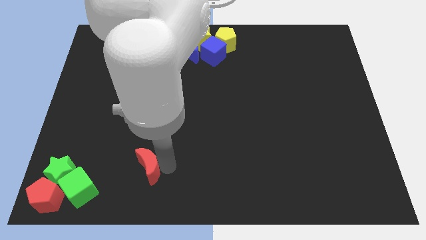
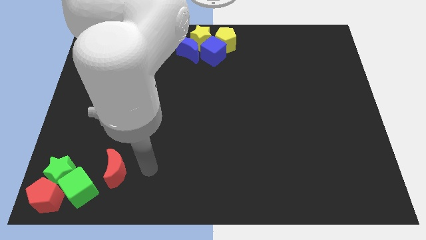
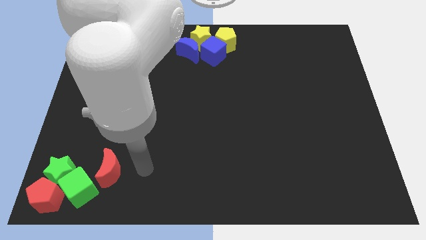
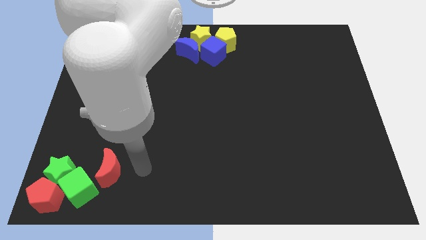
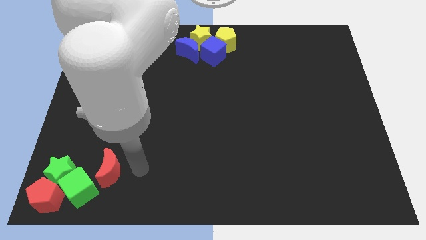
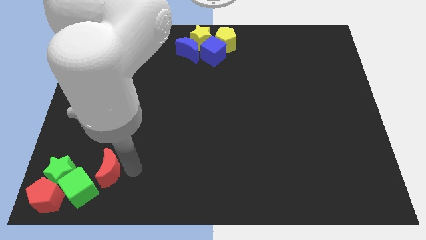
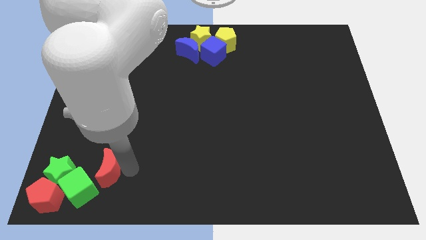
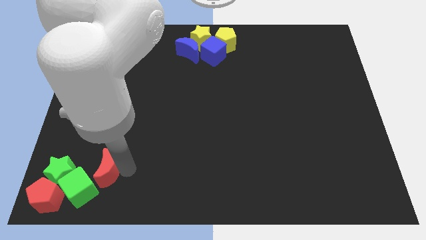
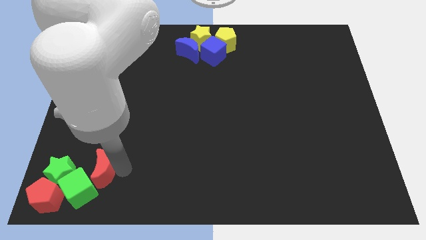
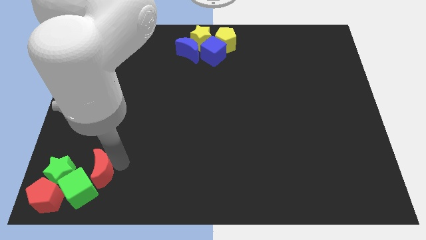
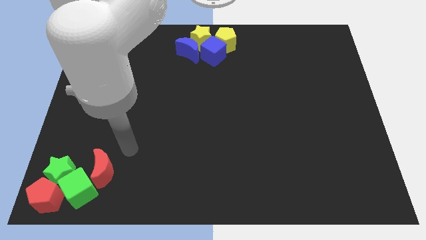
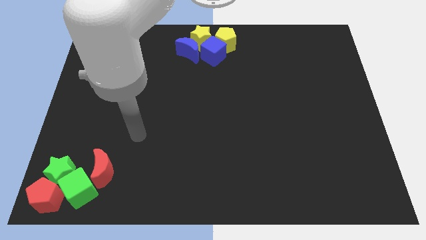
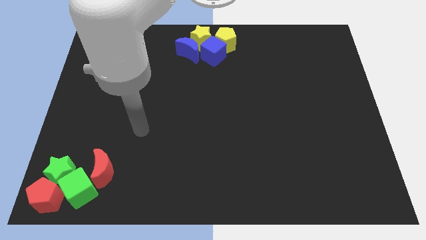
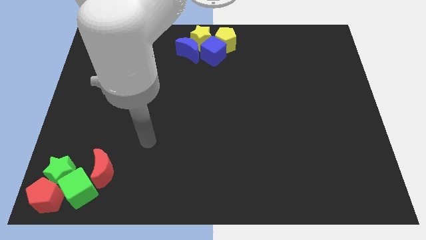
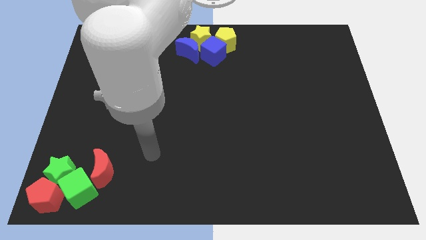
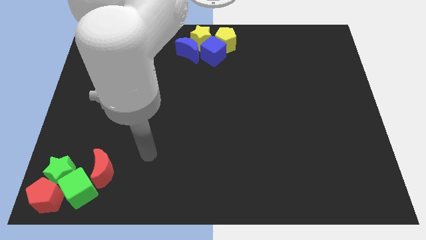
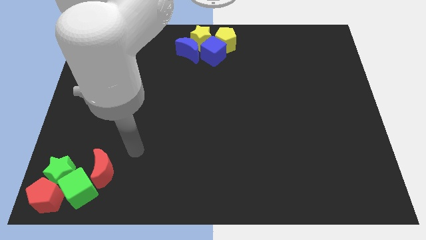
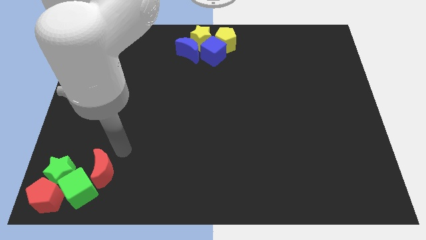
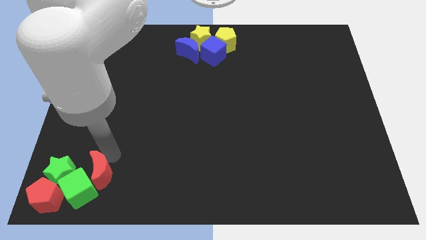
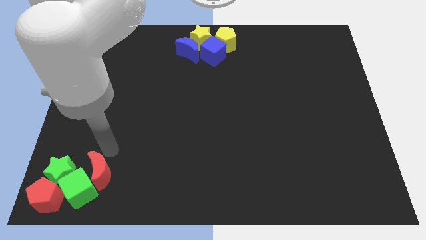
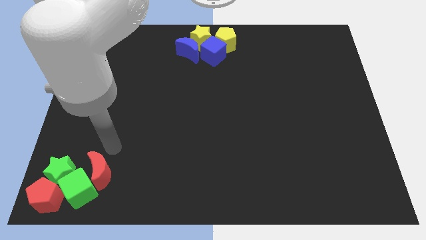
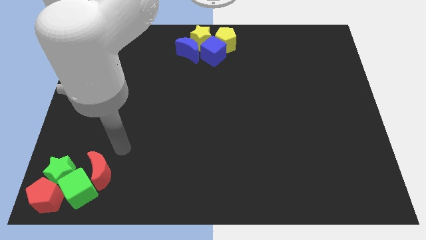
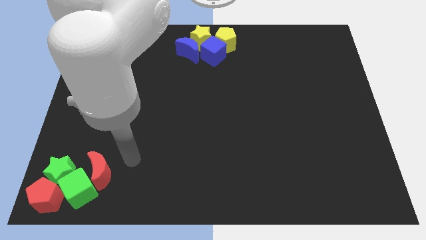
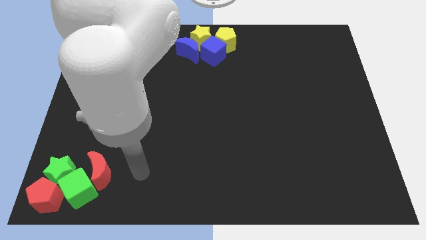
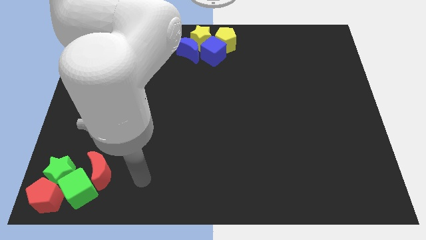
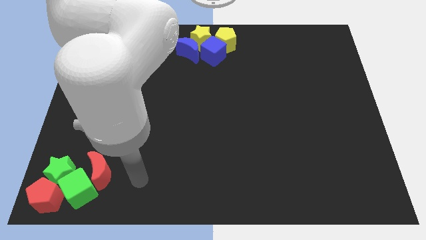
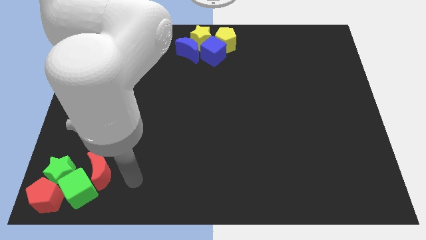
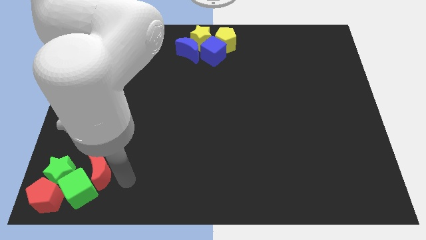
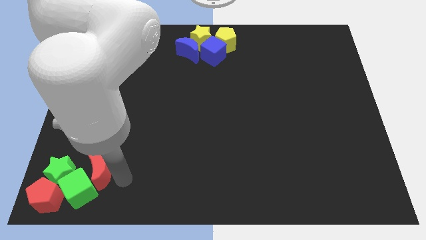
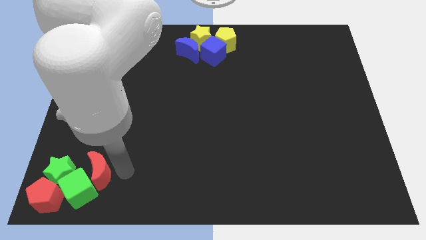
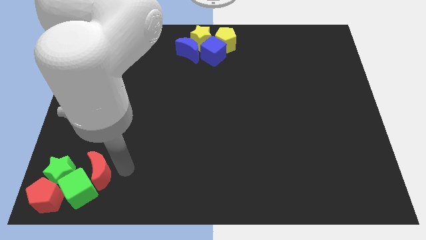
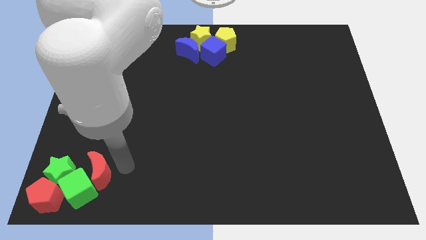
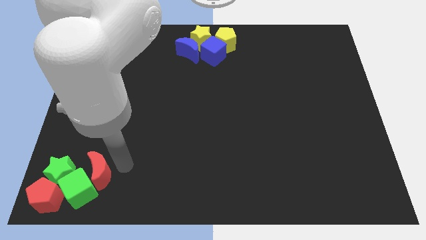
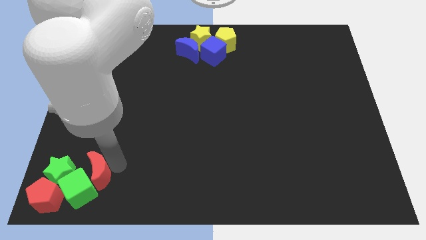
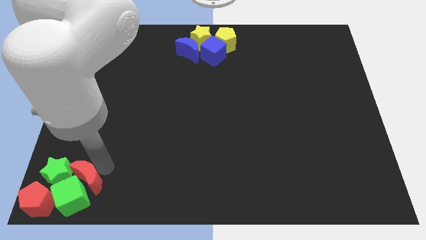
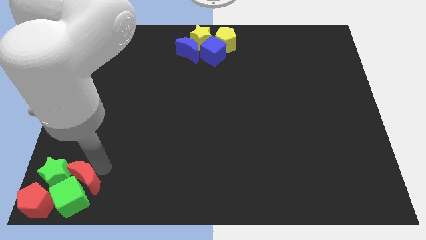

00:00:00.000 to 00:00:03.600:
move the red crescent closer to the green cube

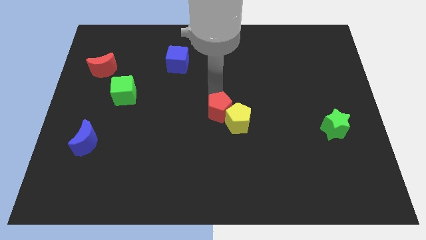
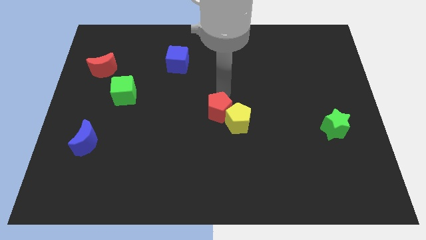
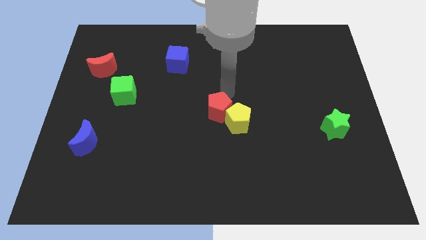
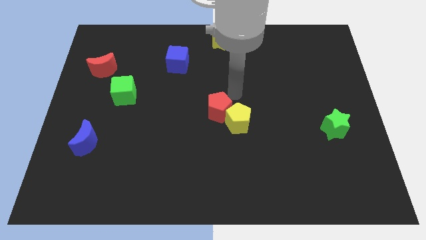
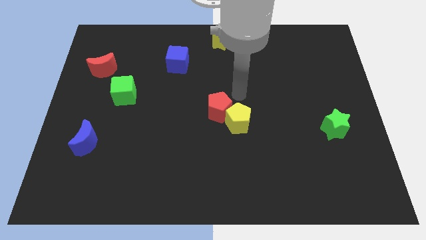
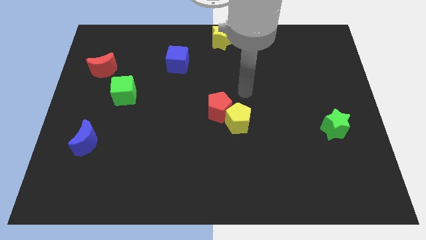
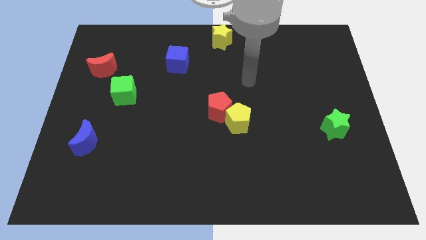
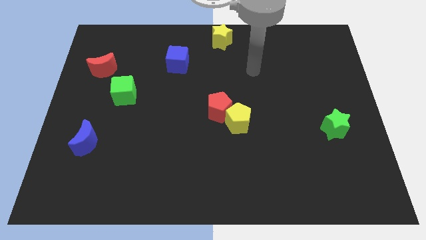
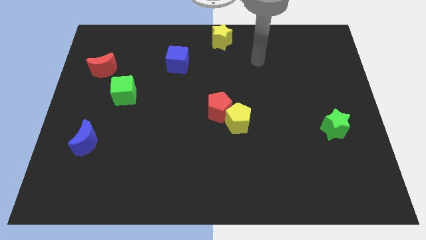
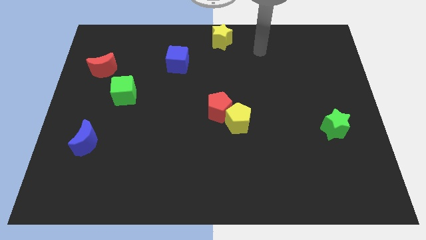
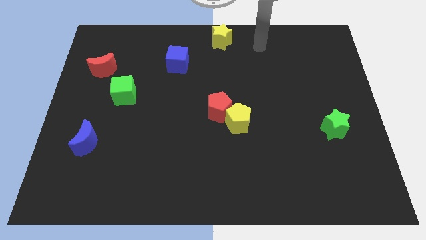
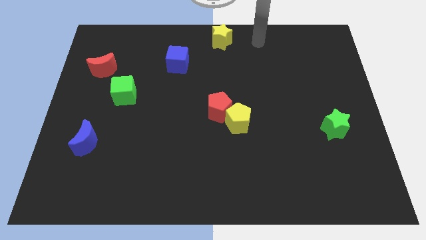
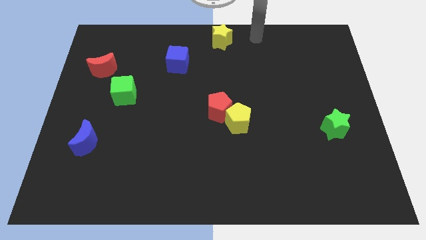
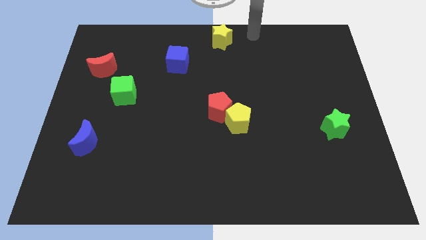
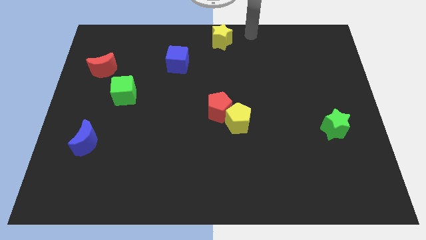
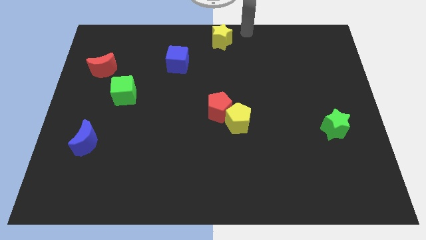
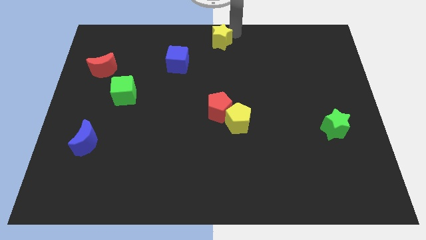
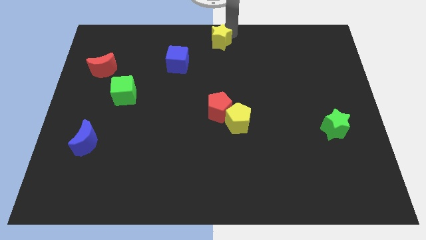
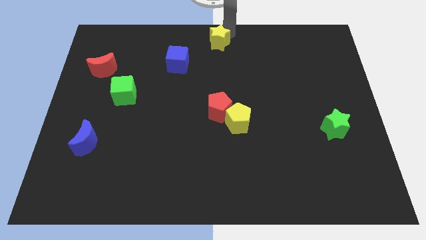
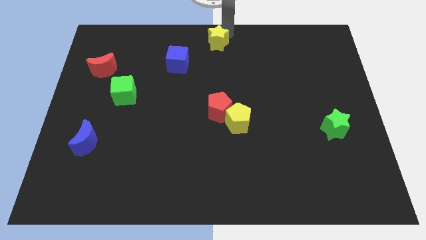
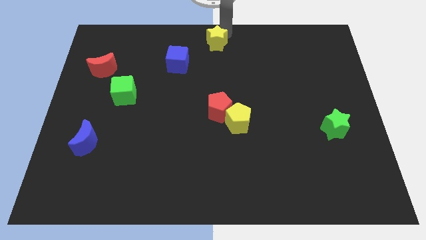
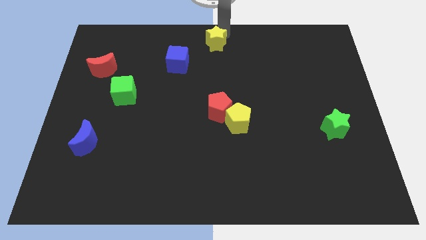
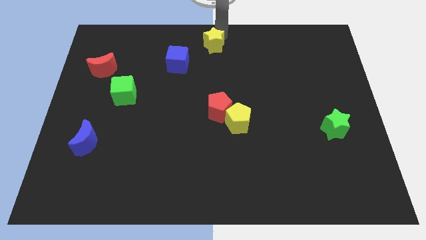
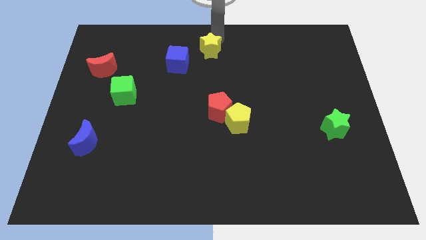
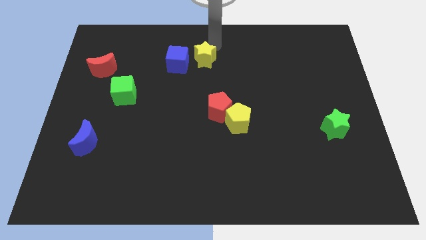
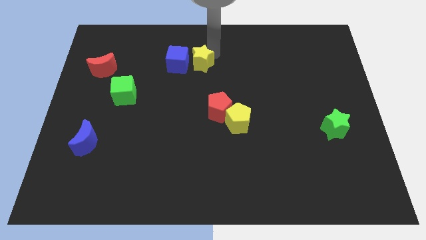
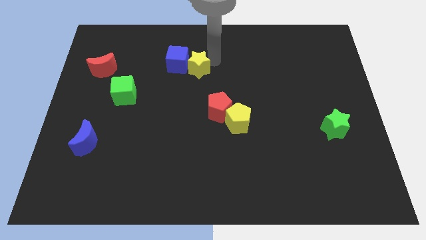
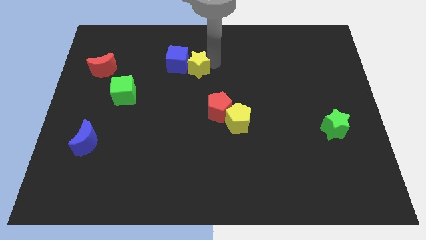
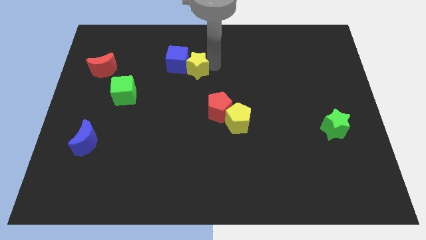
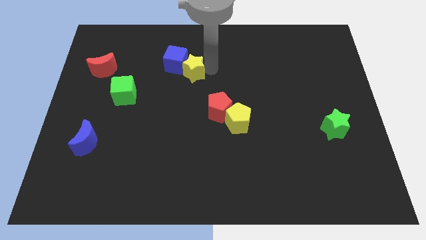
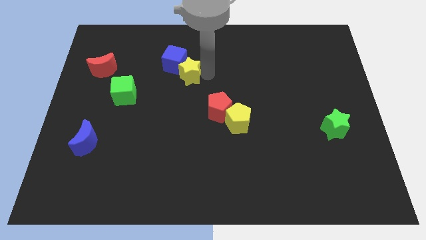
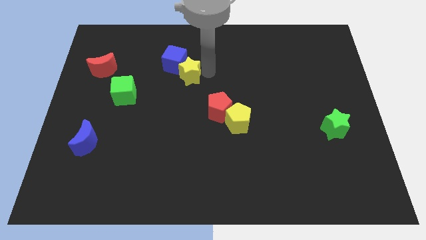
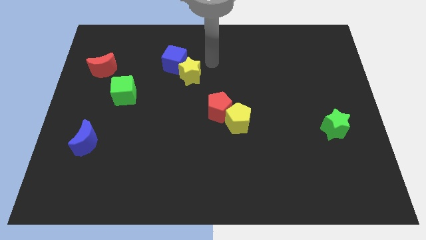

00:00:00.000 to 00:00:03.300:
push yellow star close to blue cube

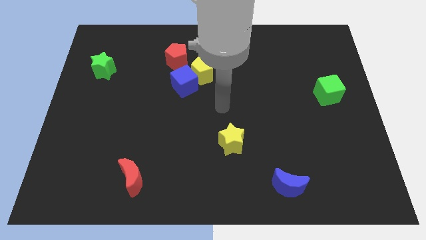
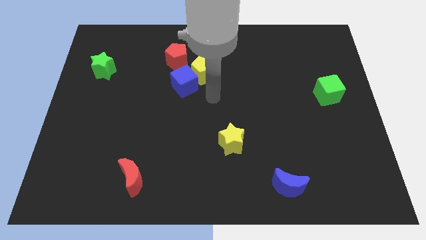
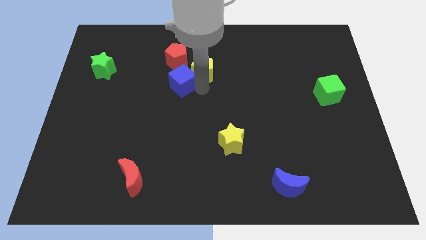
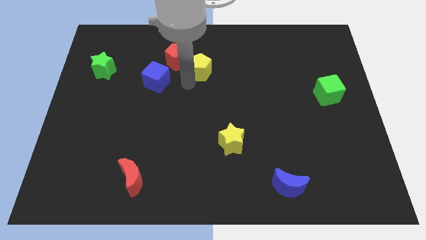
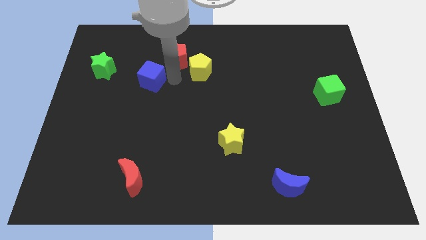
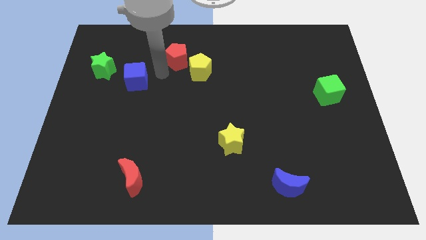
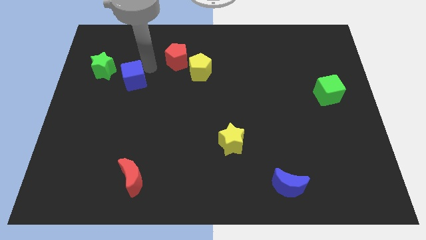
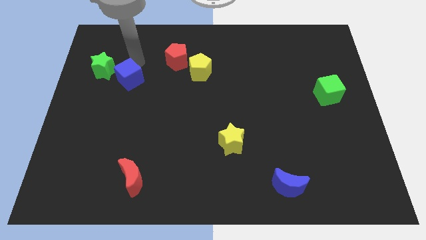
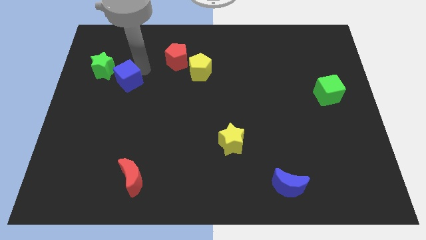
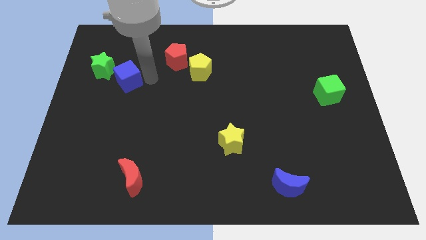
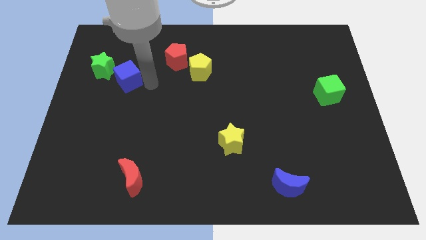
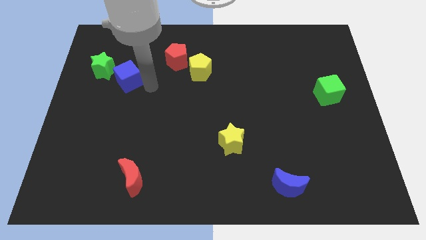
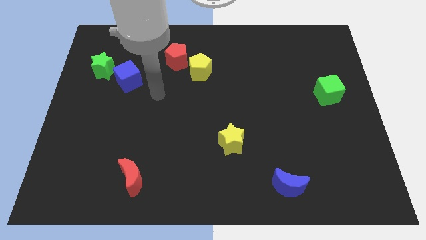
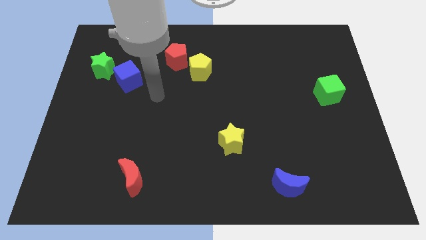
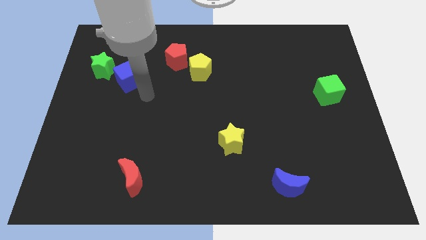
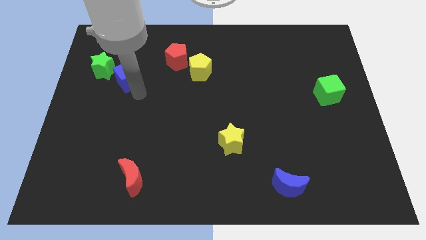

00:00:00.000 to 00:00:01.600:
place blue cube to the bottom right of green star

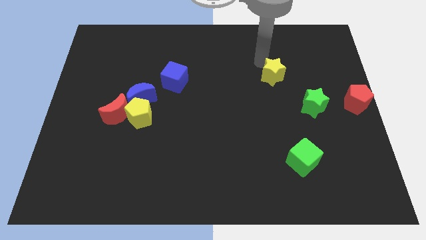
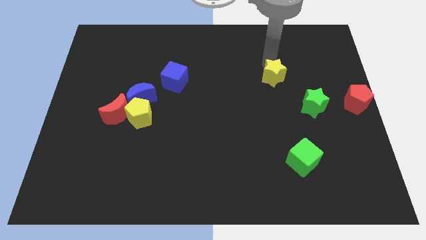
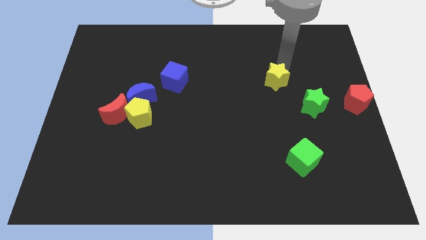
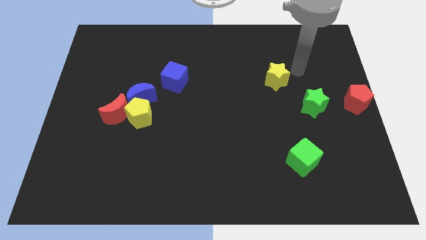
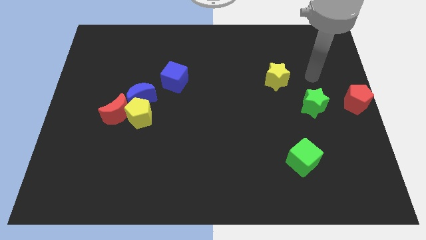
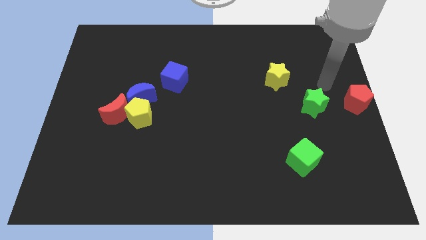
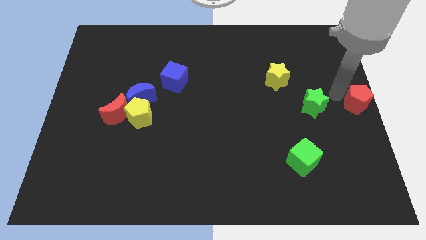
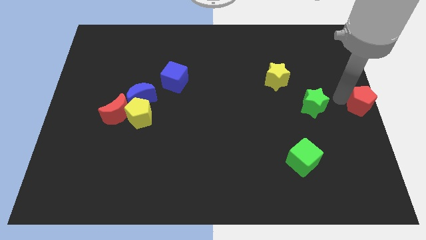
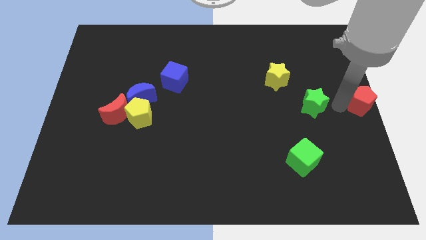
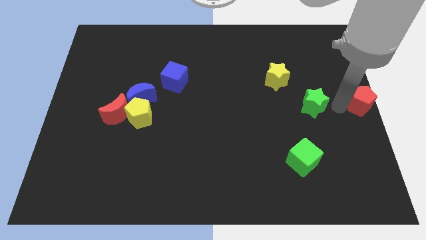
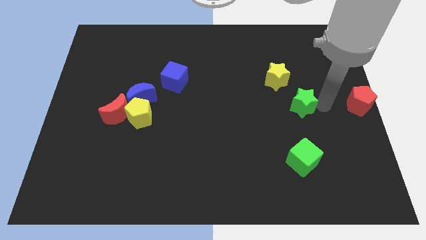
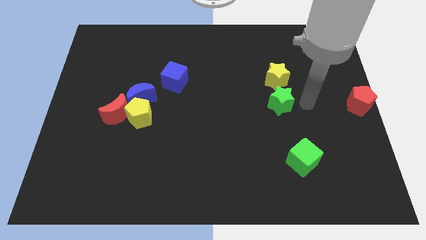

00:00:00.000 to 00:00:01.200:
push green star above green cube
